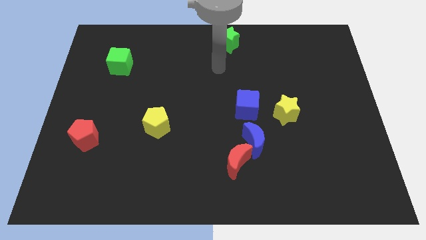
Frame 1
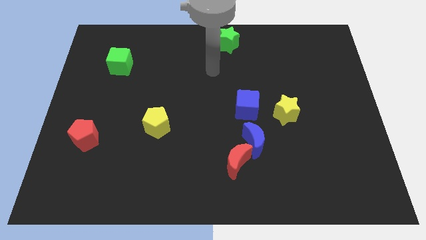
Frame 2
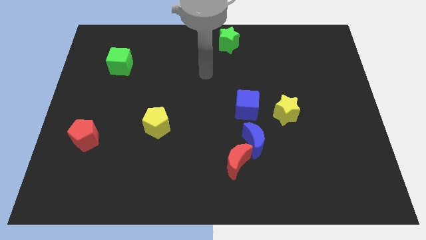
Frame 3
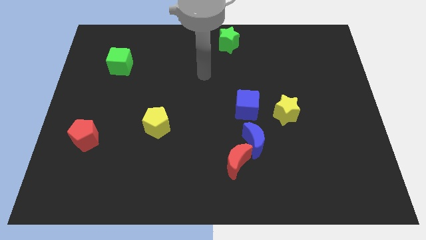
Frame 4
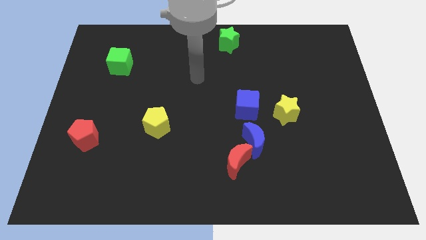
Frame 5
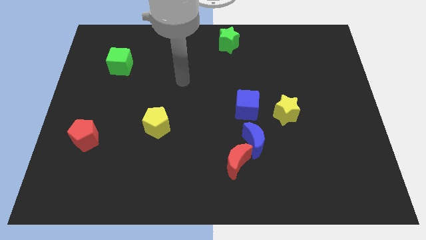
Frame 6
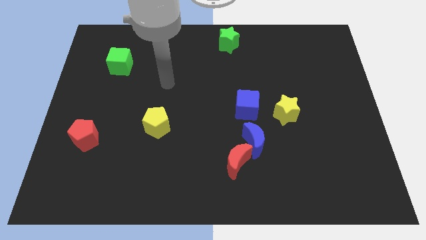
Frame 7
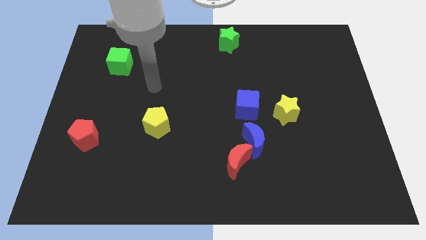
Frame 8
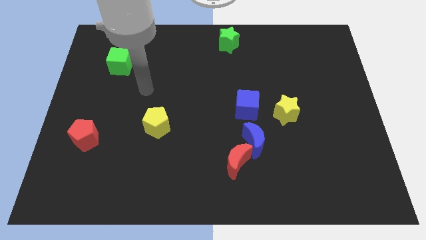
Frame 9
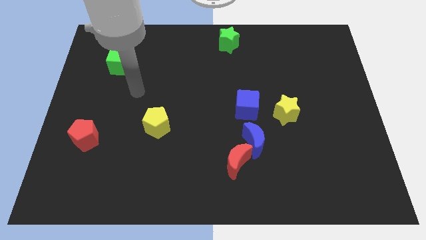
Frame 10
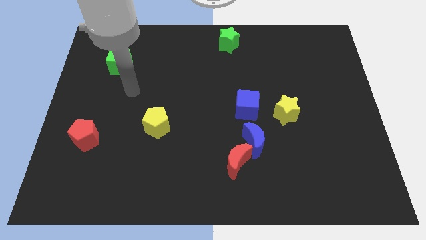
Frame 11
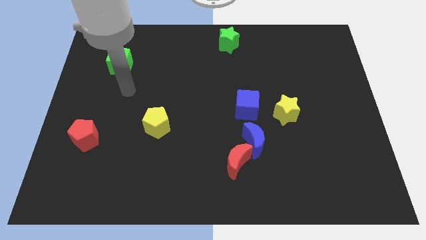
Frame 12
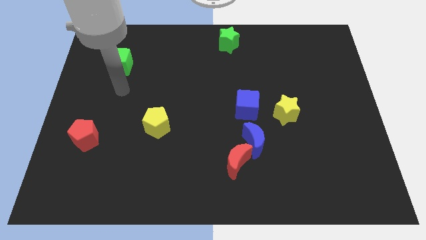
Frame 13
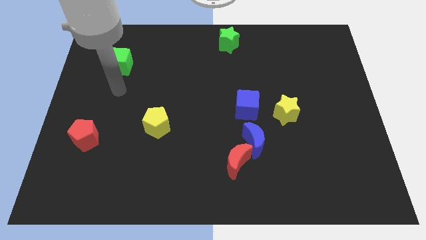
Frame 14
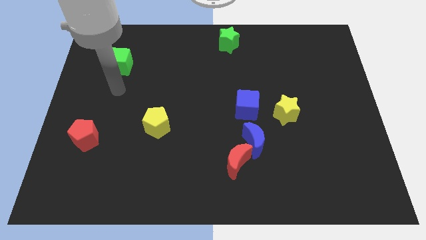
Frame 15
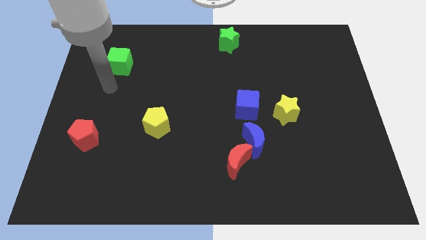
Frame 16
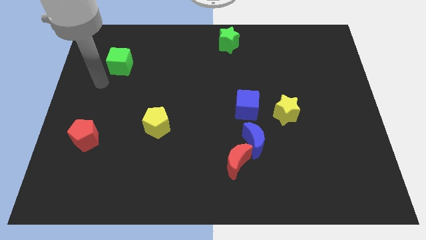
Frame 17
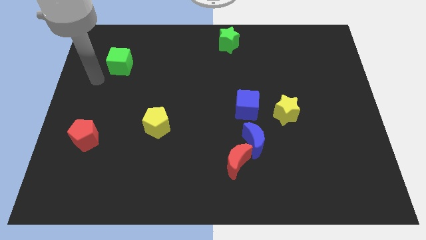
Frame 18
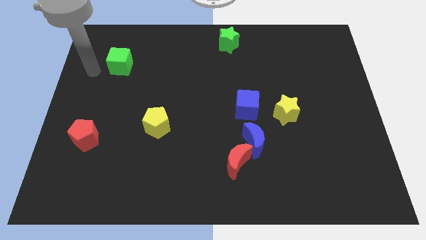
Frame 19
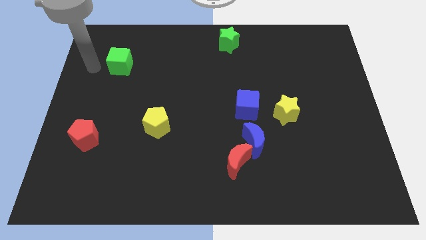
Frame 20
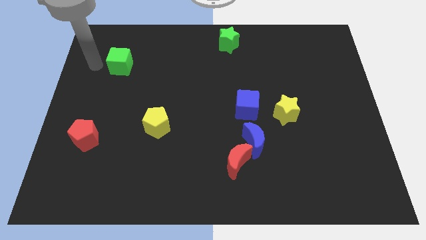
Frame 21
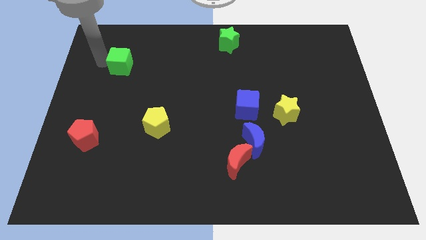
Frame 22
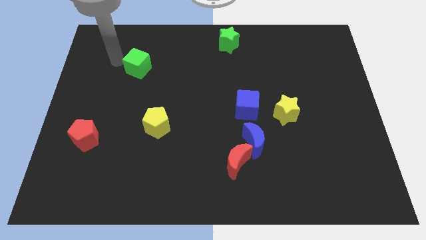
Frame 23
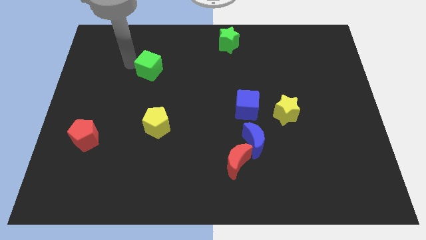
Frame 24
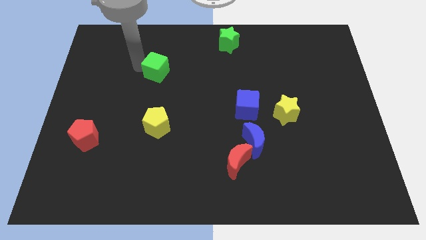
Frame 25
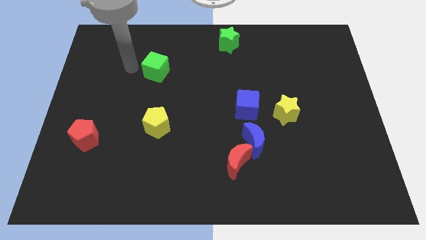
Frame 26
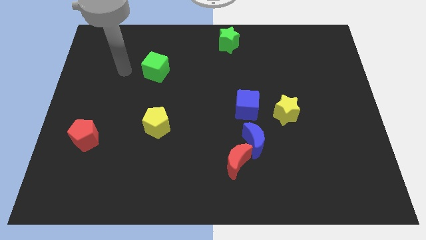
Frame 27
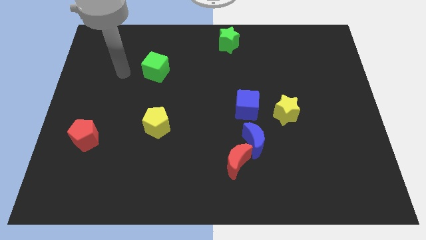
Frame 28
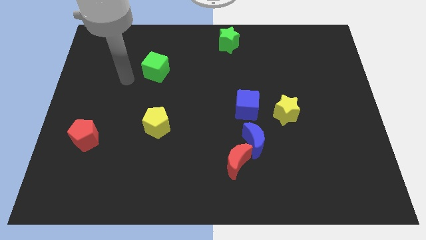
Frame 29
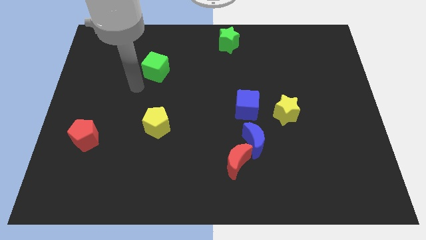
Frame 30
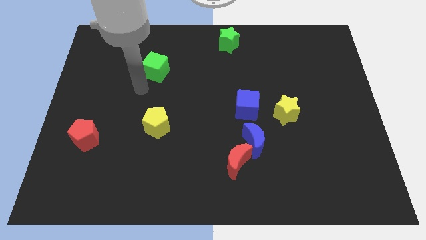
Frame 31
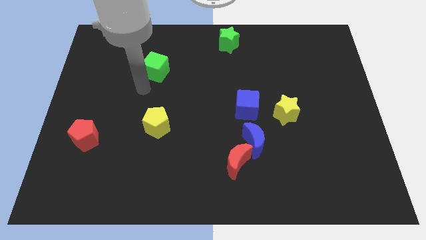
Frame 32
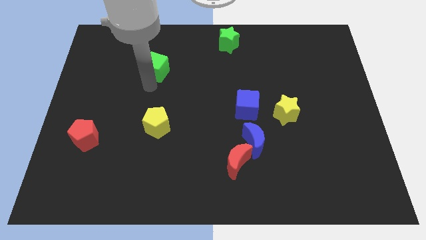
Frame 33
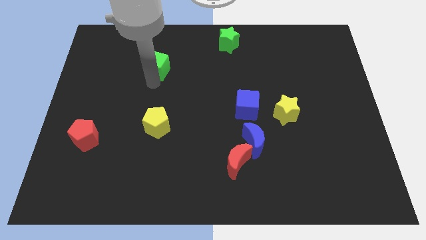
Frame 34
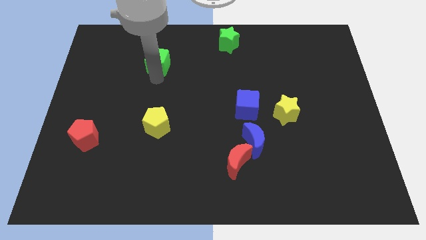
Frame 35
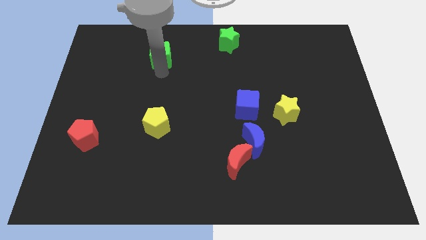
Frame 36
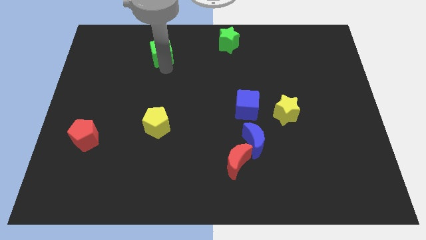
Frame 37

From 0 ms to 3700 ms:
move the green cube diagonally on the bottom left side of the green star

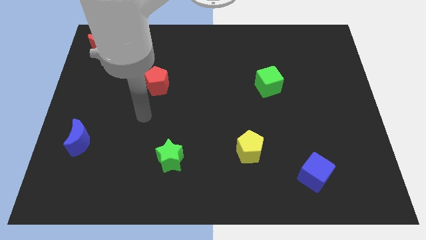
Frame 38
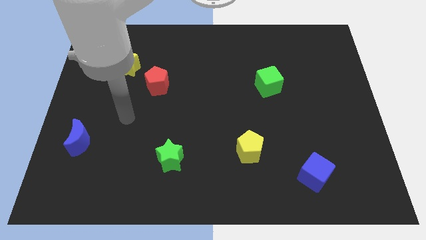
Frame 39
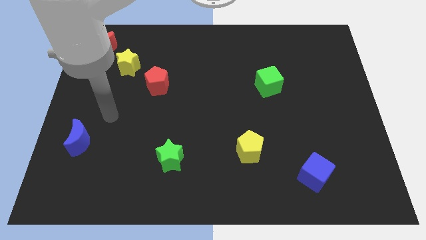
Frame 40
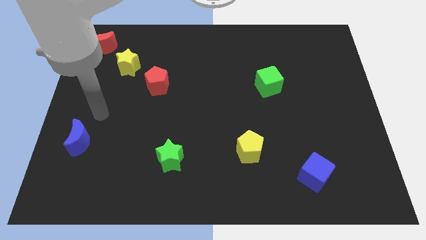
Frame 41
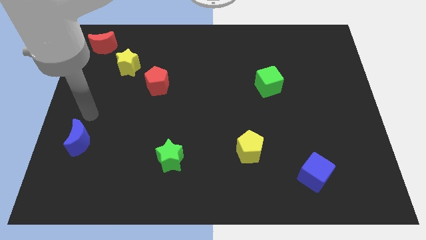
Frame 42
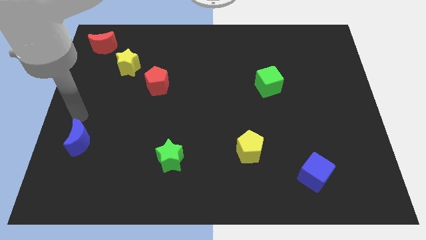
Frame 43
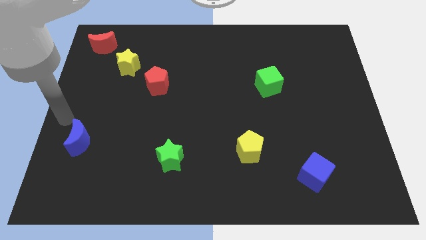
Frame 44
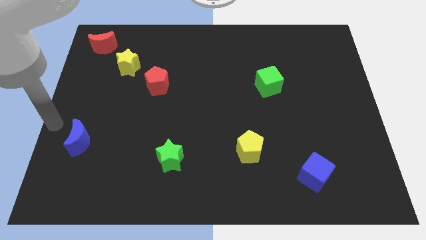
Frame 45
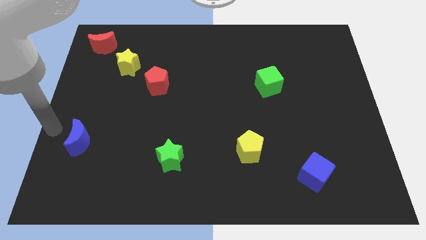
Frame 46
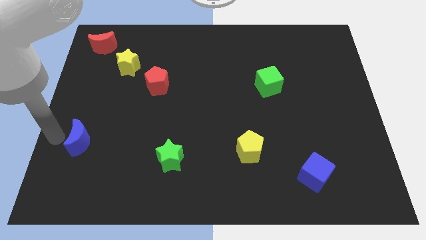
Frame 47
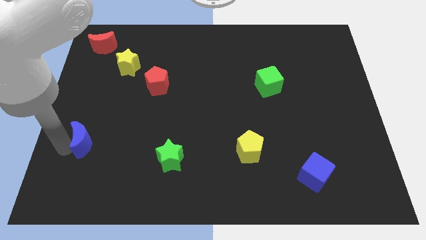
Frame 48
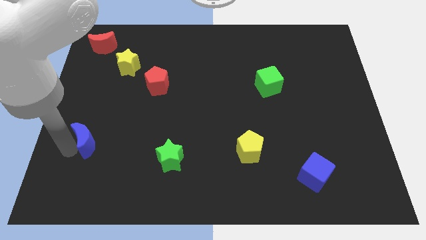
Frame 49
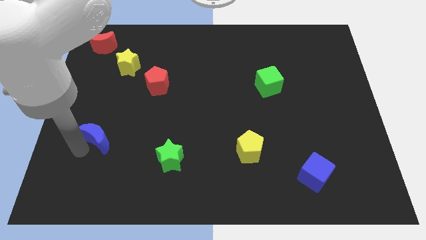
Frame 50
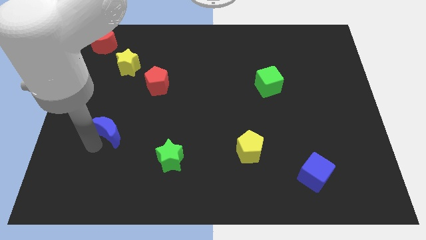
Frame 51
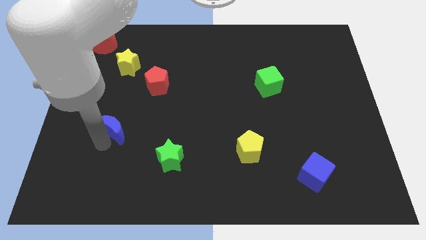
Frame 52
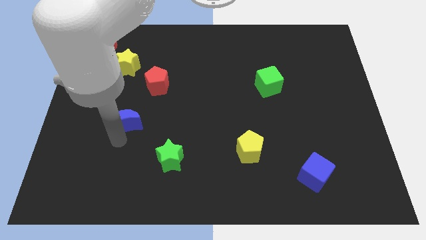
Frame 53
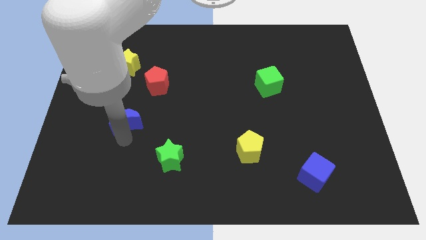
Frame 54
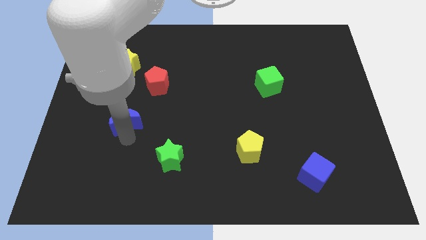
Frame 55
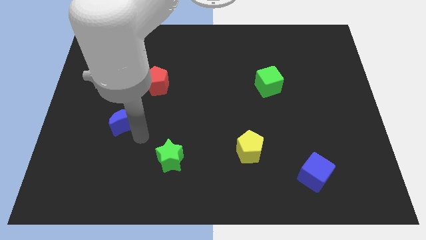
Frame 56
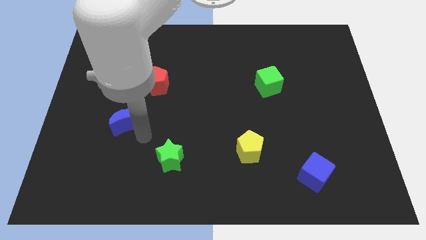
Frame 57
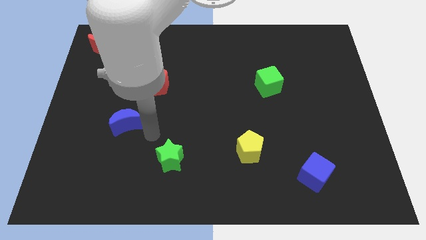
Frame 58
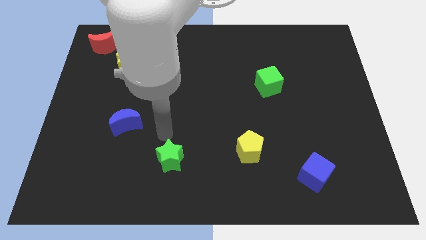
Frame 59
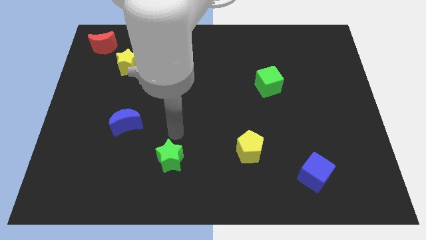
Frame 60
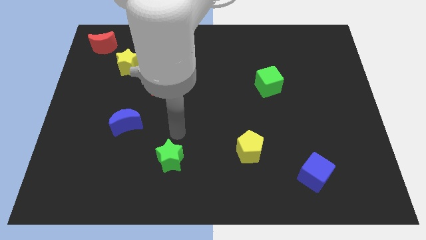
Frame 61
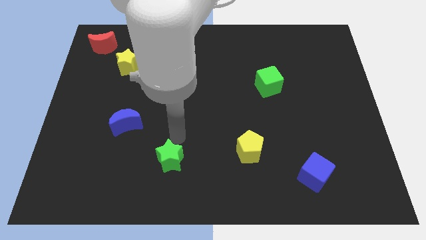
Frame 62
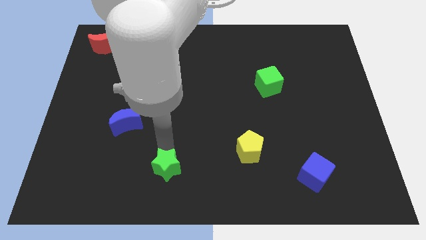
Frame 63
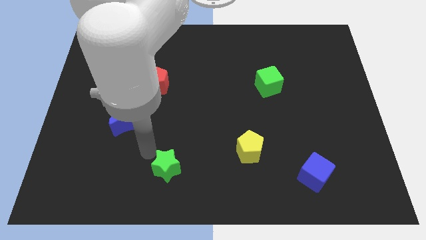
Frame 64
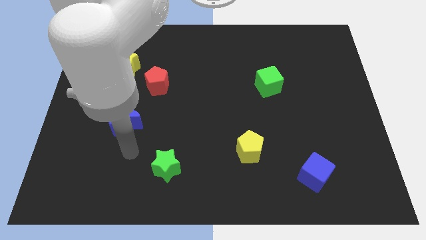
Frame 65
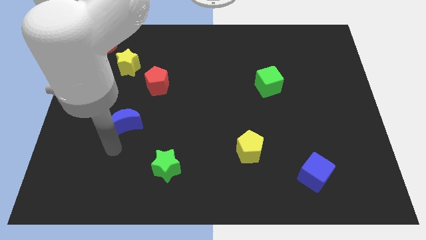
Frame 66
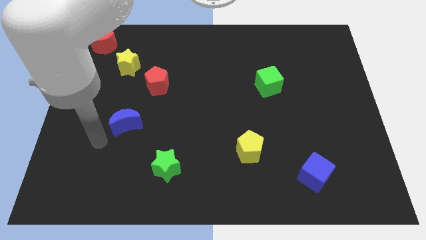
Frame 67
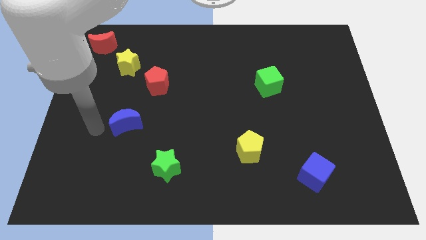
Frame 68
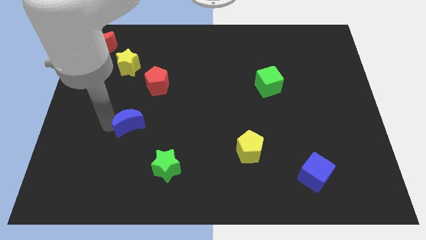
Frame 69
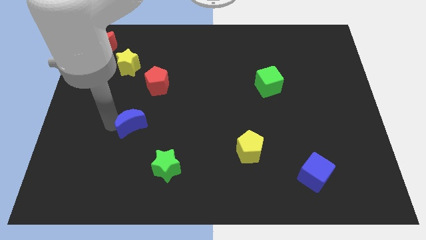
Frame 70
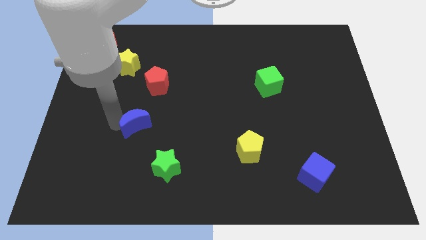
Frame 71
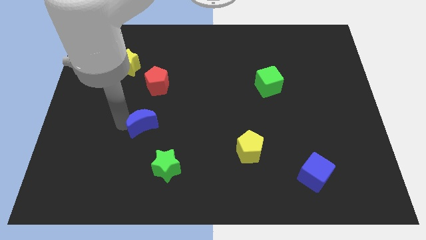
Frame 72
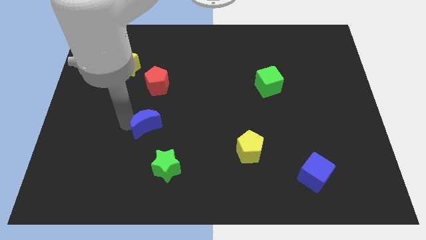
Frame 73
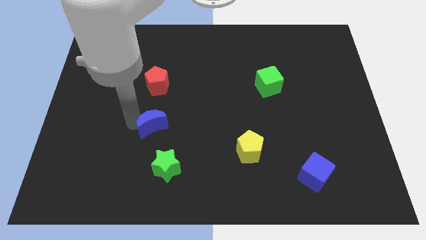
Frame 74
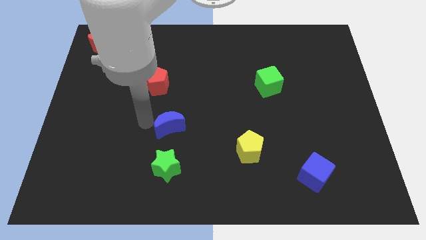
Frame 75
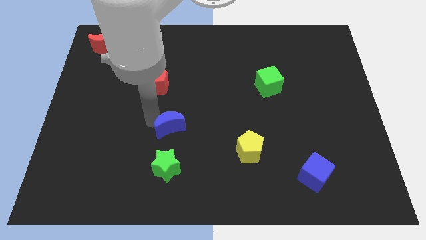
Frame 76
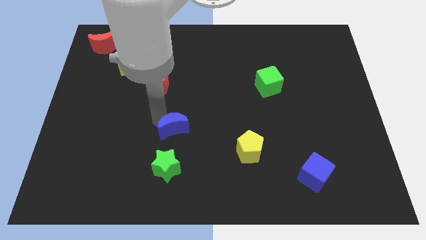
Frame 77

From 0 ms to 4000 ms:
place blue crescent in between the green star and the red pentagon

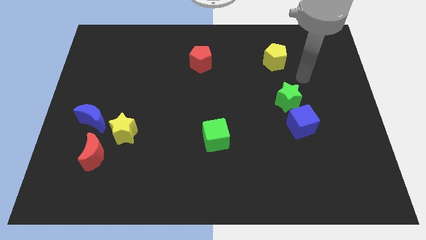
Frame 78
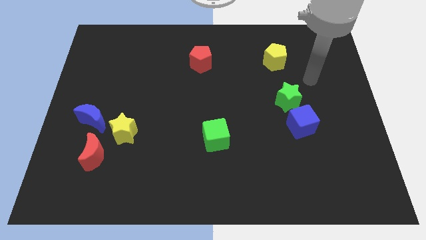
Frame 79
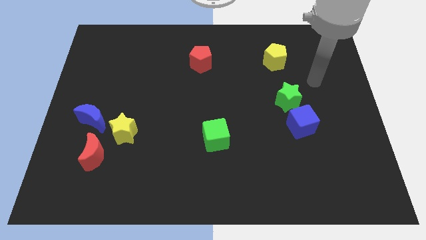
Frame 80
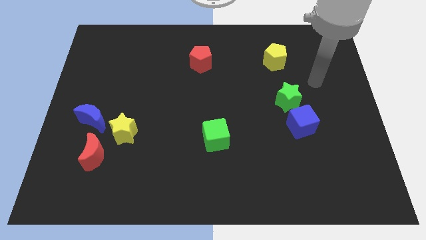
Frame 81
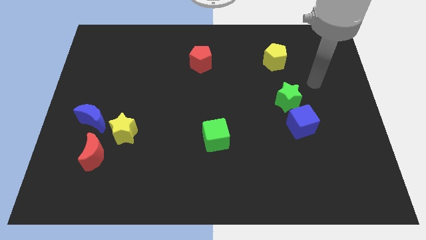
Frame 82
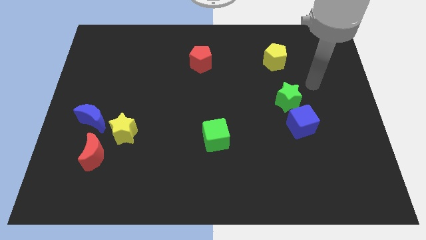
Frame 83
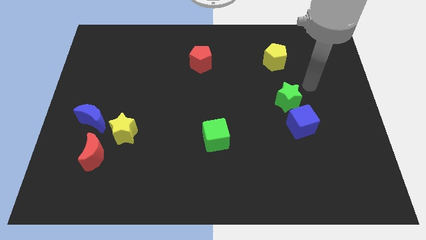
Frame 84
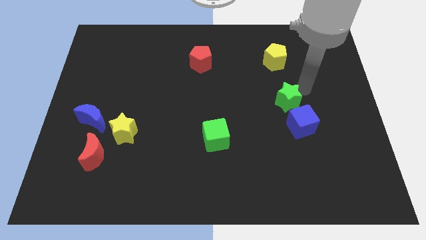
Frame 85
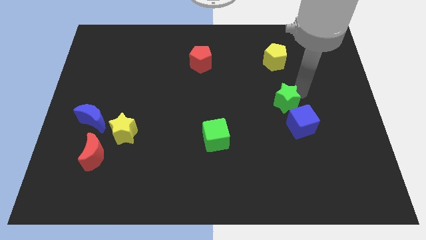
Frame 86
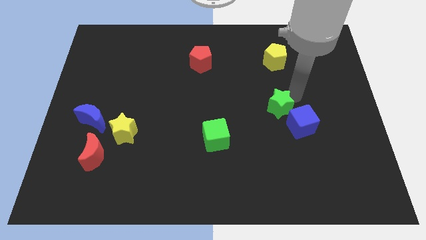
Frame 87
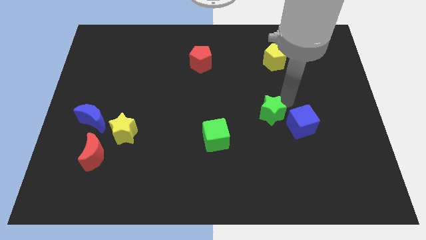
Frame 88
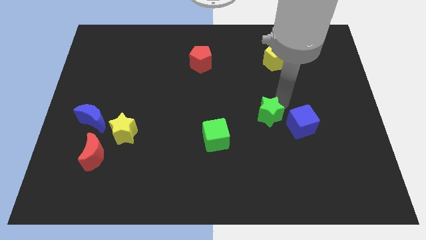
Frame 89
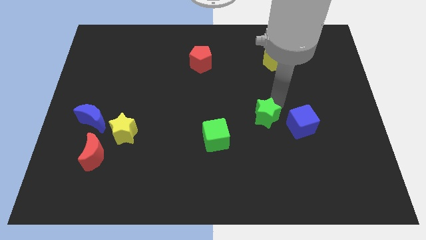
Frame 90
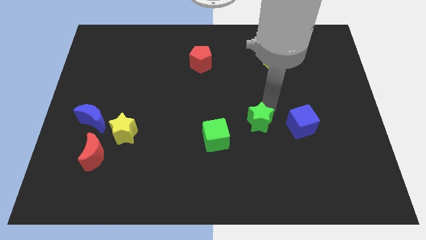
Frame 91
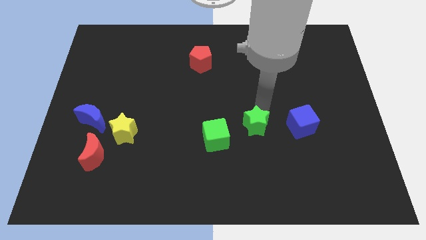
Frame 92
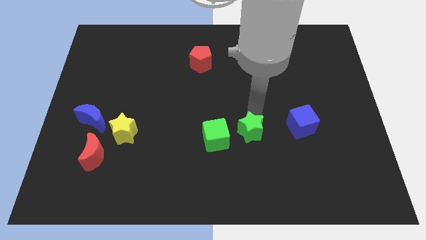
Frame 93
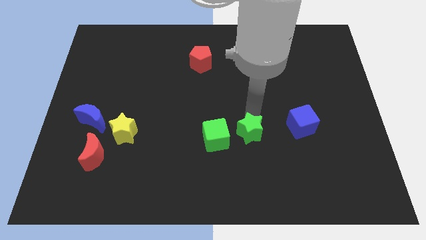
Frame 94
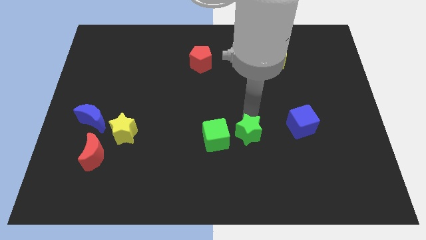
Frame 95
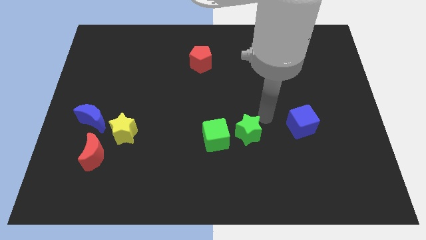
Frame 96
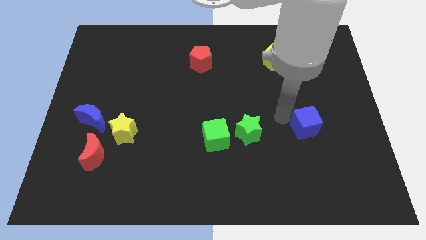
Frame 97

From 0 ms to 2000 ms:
push the green star to the right of green cube
